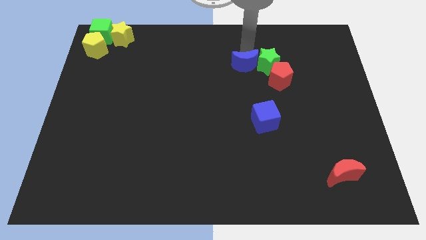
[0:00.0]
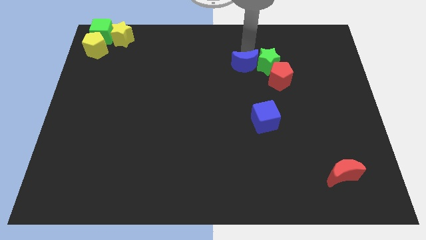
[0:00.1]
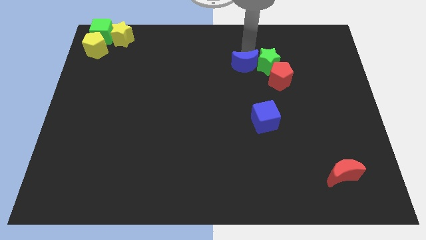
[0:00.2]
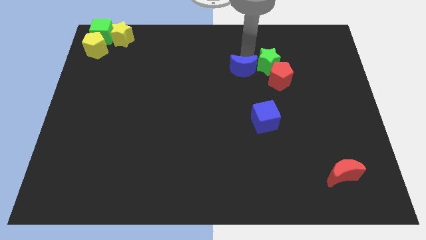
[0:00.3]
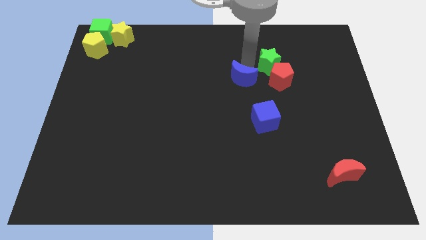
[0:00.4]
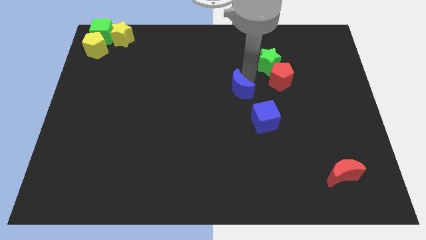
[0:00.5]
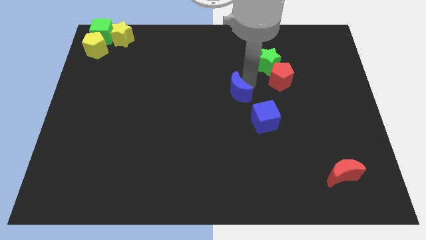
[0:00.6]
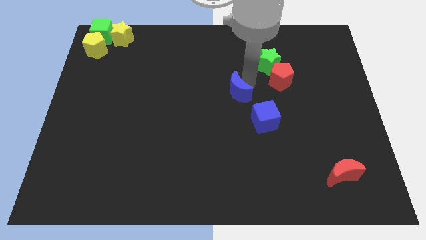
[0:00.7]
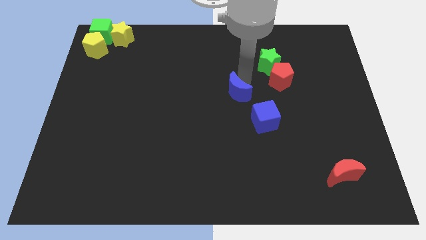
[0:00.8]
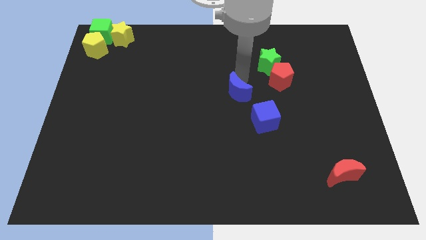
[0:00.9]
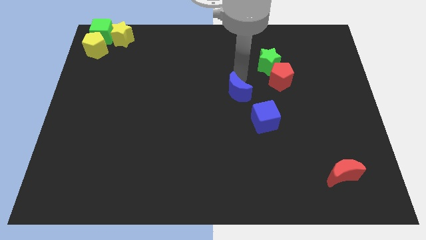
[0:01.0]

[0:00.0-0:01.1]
move the blue crescent away from the green star

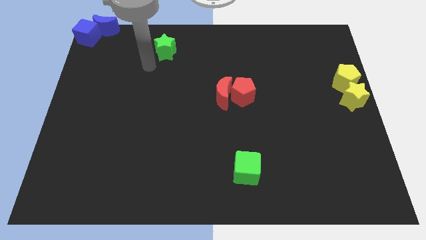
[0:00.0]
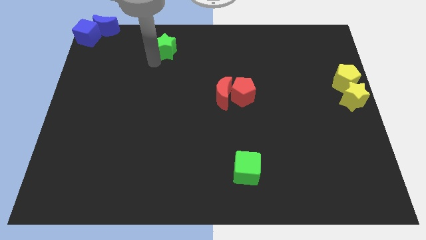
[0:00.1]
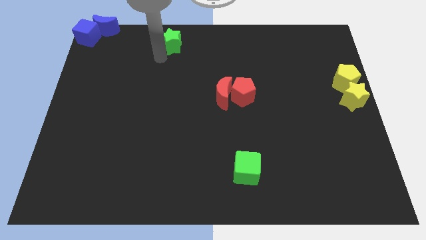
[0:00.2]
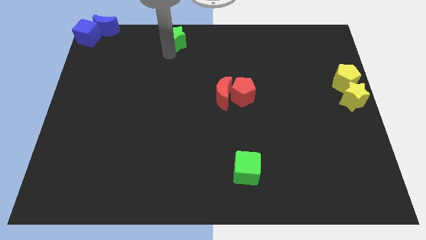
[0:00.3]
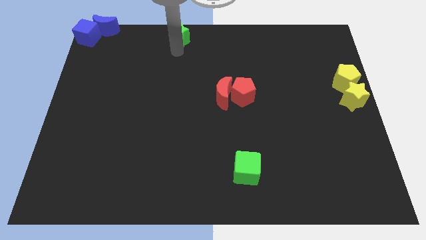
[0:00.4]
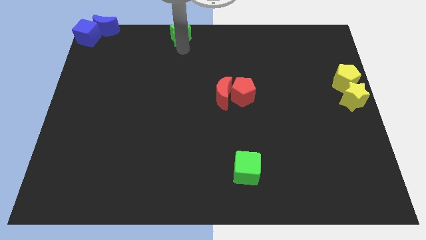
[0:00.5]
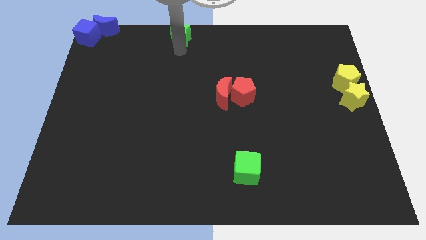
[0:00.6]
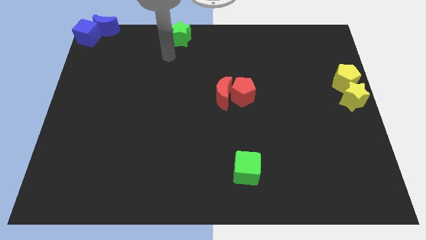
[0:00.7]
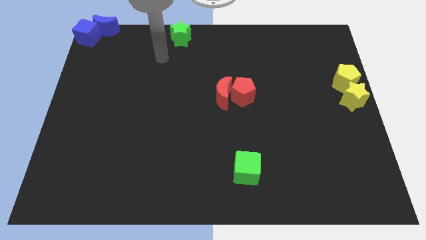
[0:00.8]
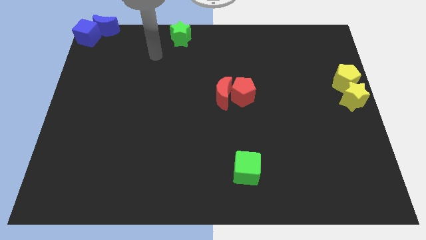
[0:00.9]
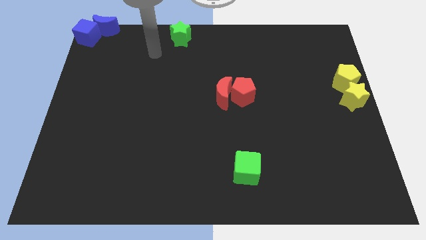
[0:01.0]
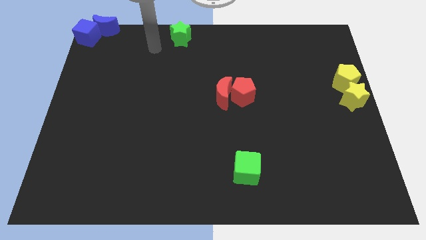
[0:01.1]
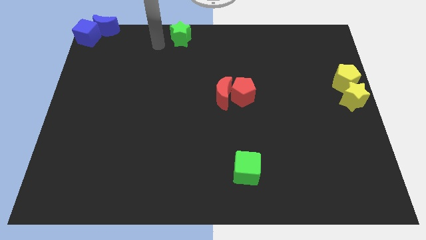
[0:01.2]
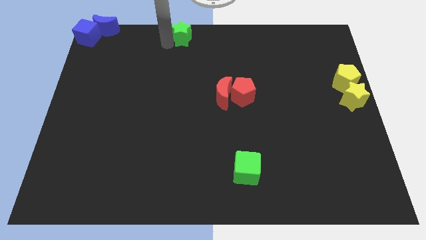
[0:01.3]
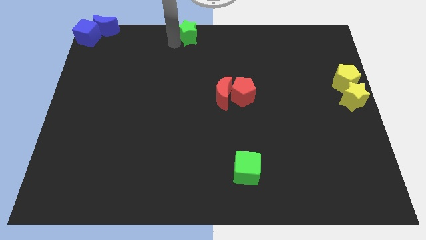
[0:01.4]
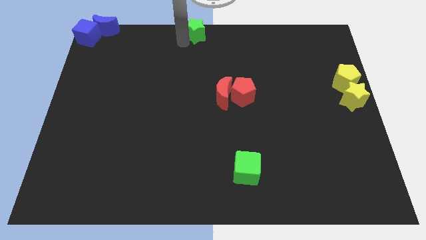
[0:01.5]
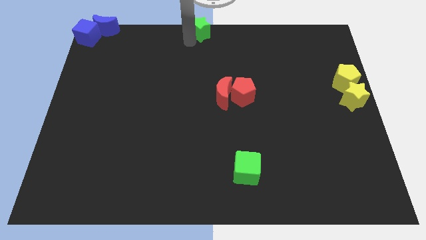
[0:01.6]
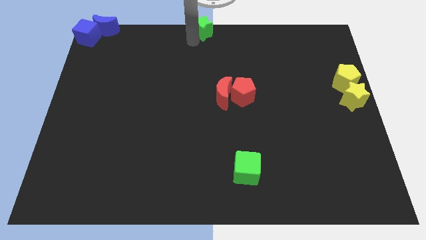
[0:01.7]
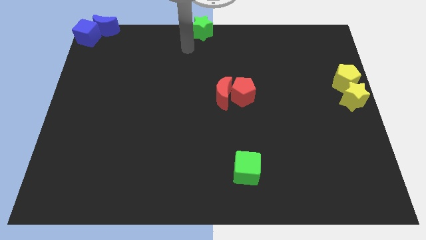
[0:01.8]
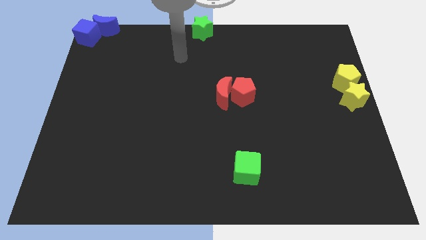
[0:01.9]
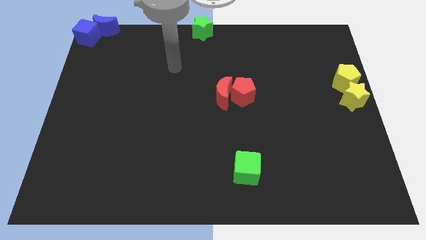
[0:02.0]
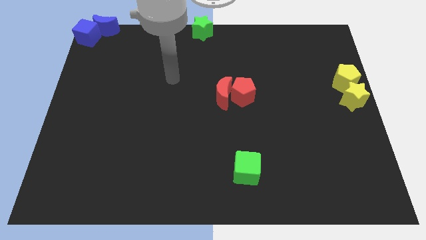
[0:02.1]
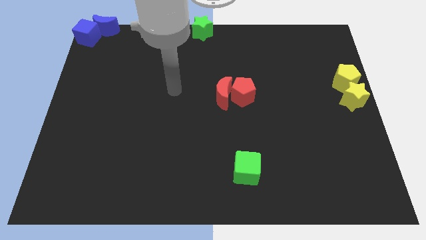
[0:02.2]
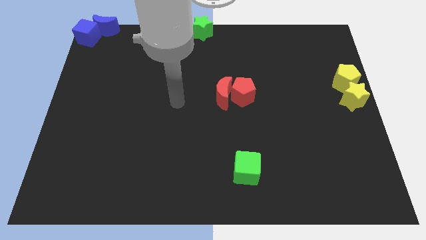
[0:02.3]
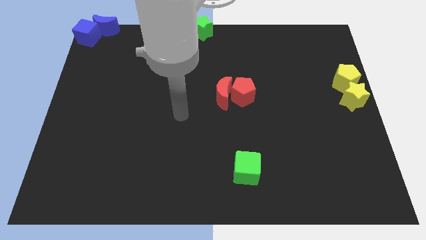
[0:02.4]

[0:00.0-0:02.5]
push the green star to the top side of the board

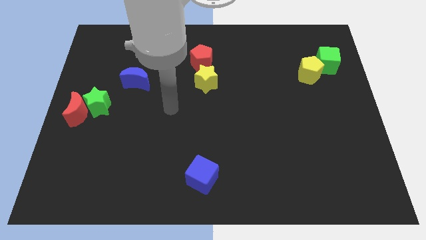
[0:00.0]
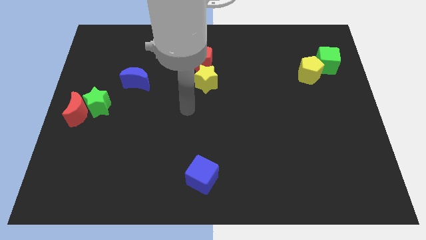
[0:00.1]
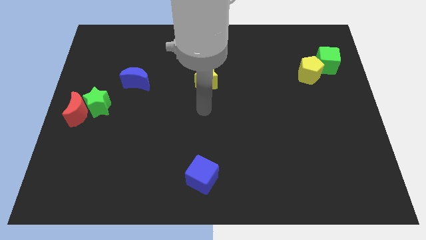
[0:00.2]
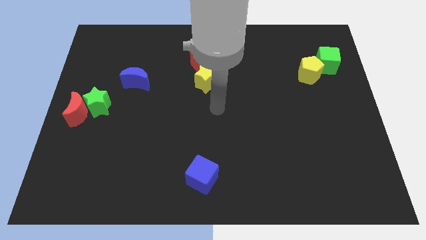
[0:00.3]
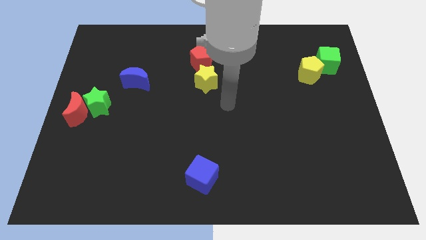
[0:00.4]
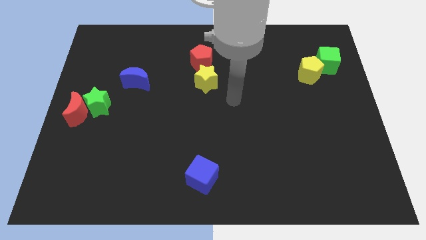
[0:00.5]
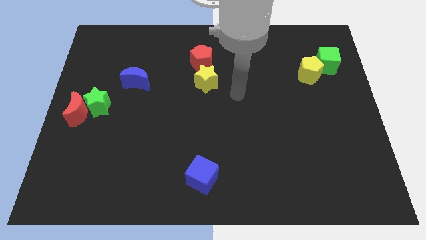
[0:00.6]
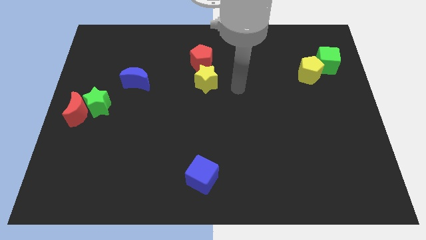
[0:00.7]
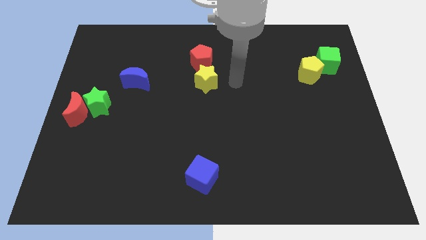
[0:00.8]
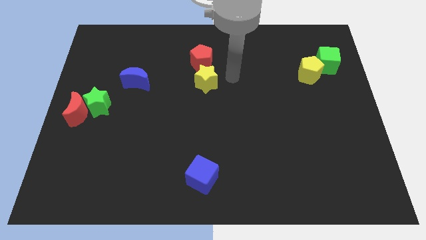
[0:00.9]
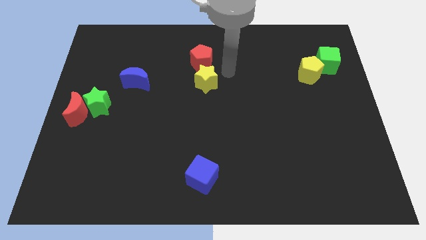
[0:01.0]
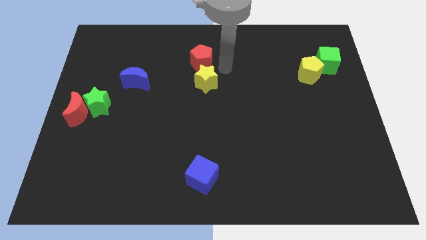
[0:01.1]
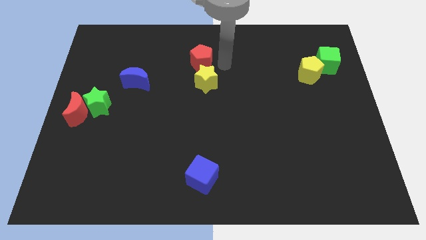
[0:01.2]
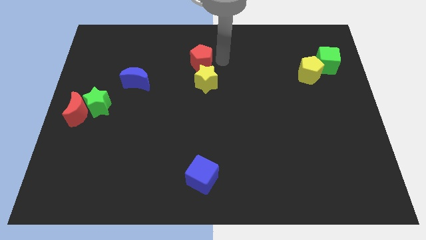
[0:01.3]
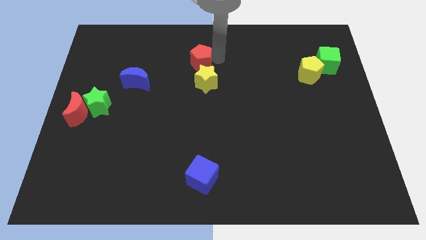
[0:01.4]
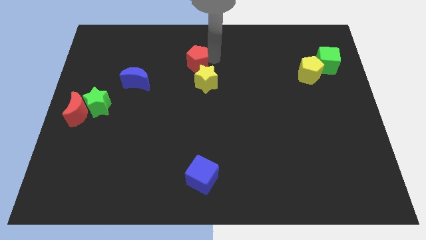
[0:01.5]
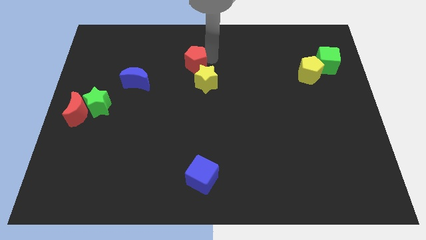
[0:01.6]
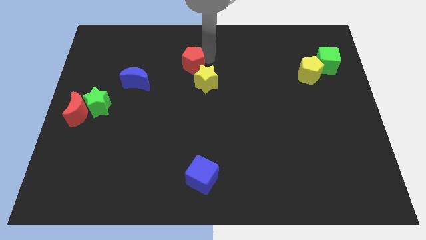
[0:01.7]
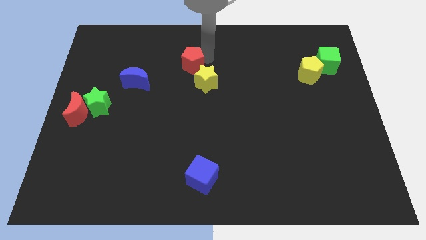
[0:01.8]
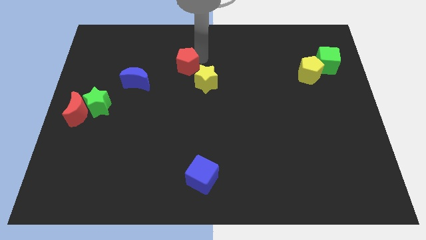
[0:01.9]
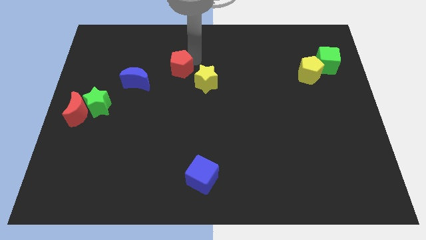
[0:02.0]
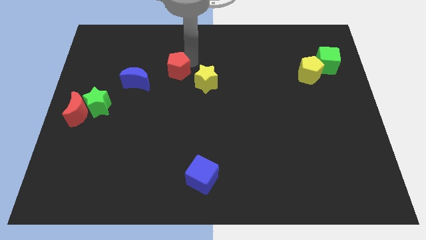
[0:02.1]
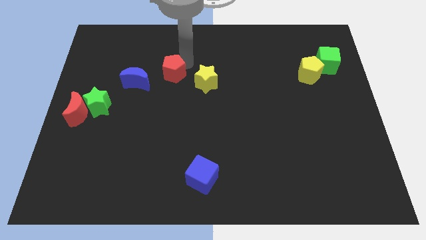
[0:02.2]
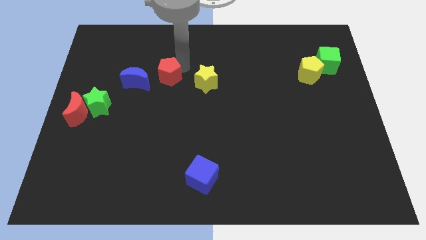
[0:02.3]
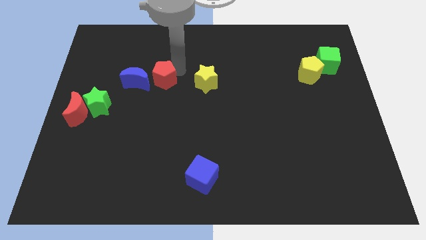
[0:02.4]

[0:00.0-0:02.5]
separate the red pentagon from the yellow star

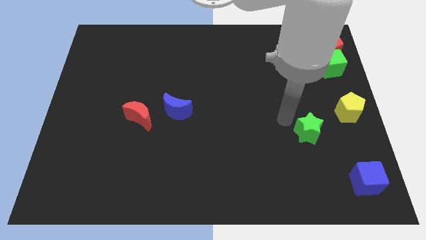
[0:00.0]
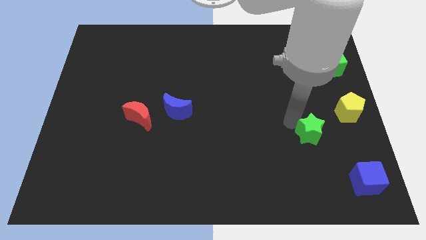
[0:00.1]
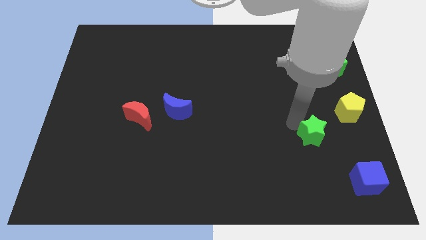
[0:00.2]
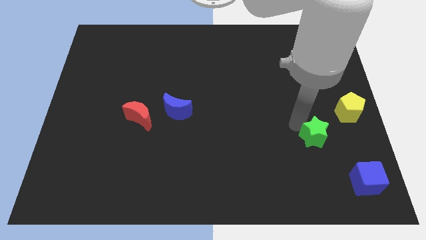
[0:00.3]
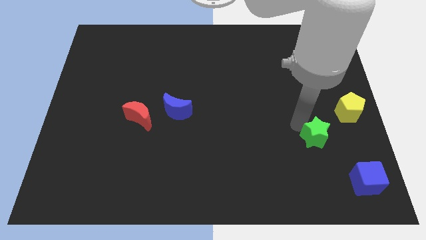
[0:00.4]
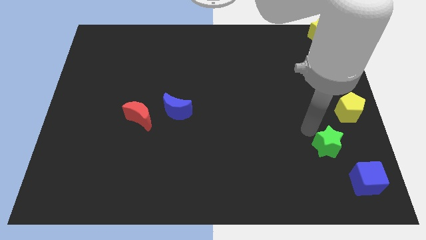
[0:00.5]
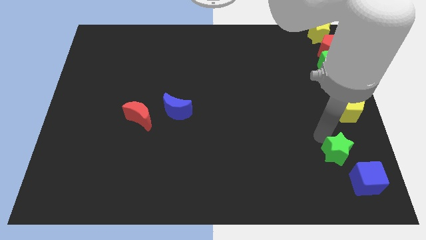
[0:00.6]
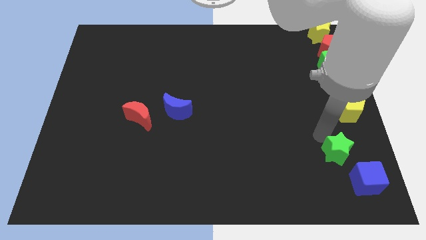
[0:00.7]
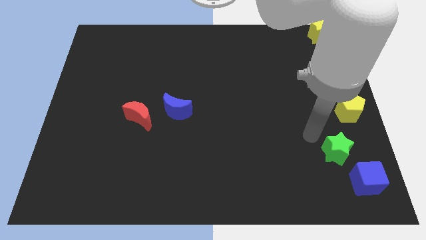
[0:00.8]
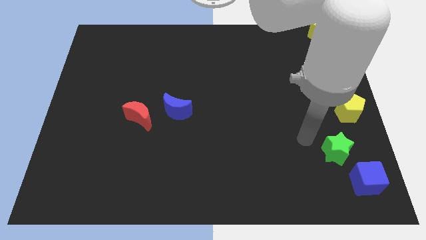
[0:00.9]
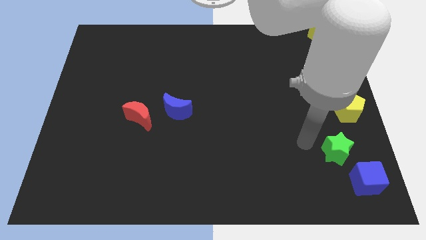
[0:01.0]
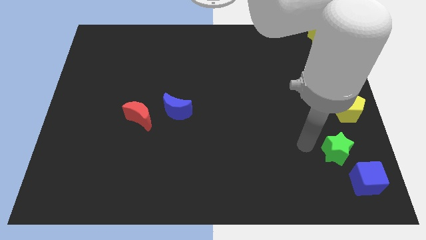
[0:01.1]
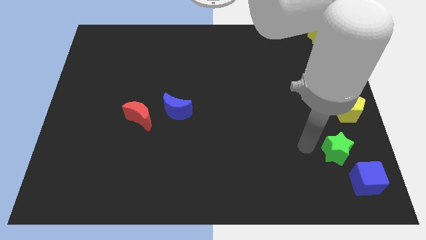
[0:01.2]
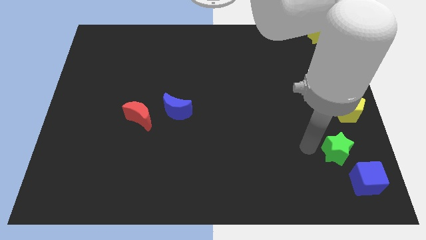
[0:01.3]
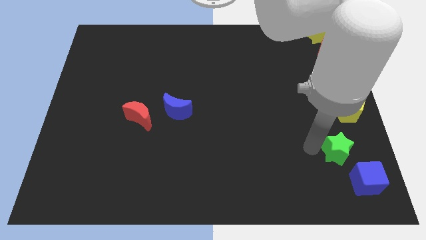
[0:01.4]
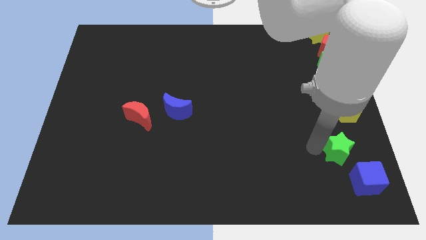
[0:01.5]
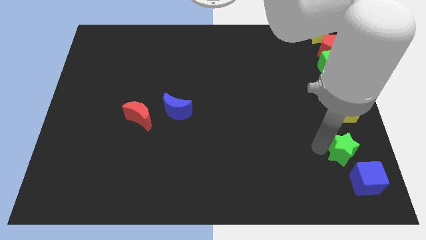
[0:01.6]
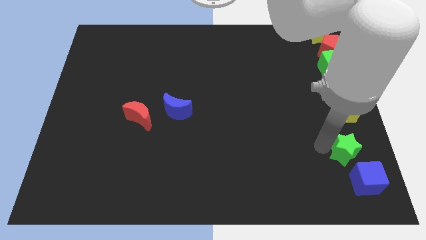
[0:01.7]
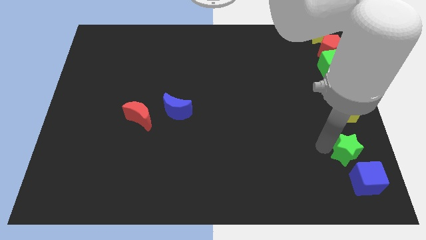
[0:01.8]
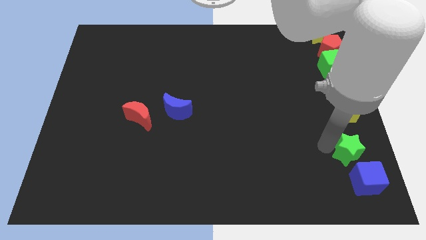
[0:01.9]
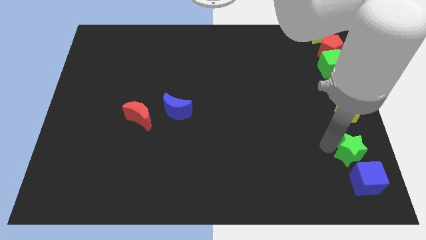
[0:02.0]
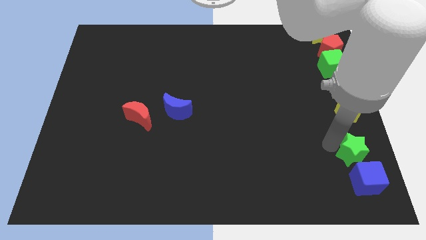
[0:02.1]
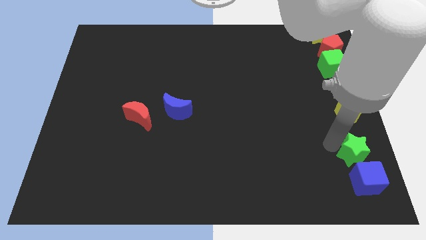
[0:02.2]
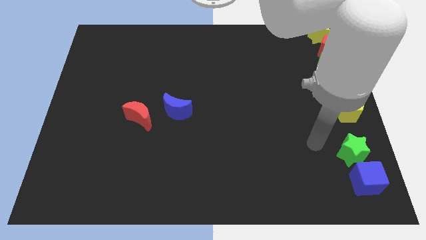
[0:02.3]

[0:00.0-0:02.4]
place the green star above the blue cube

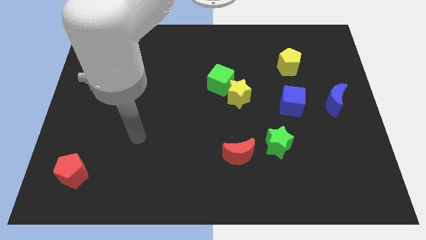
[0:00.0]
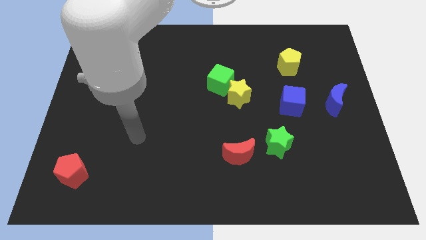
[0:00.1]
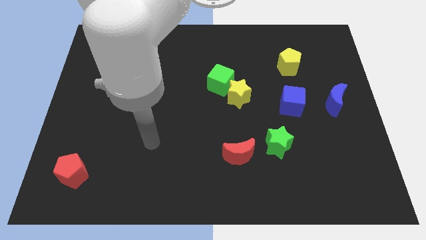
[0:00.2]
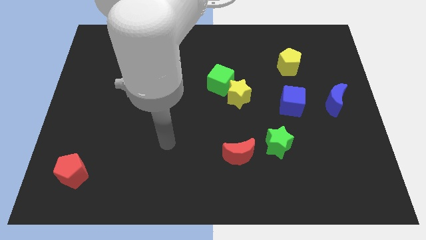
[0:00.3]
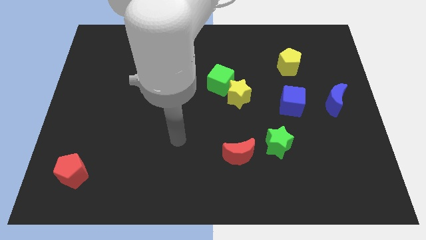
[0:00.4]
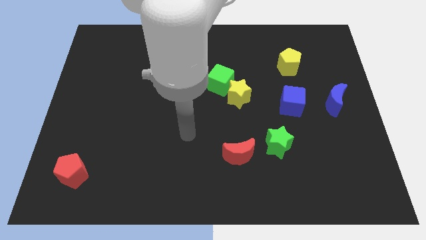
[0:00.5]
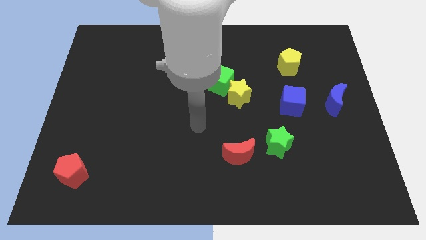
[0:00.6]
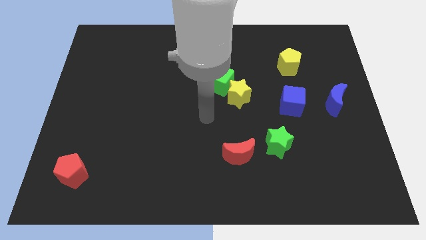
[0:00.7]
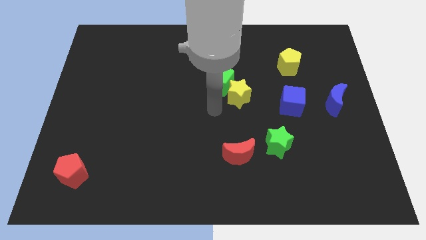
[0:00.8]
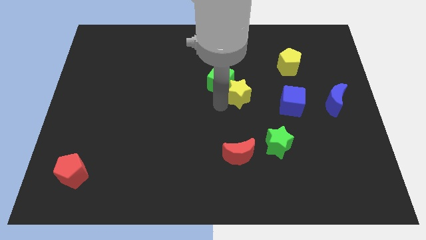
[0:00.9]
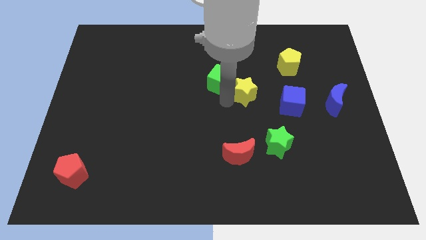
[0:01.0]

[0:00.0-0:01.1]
tap on the bottom left side of yellow star
